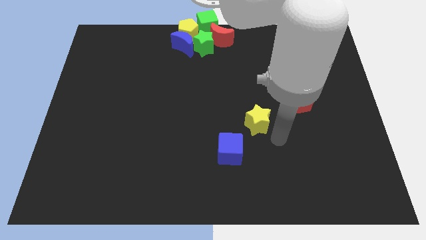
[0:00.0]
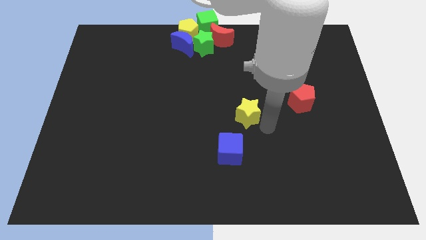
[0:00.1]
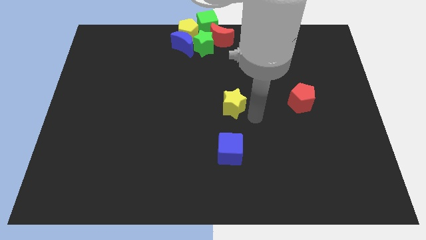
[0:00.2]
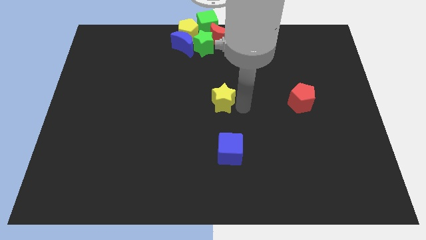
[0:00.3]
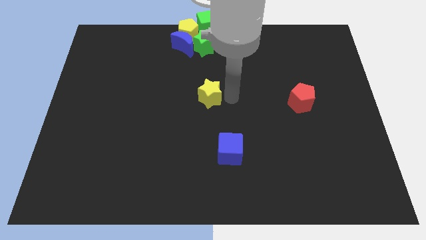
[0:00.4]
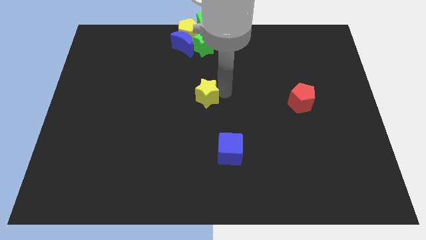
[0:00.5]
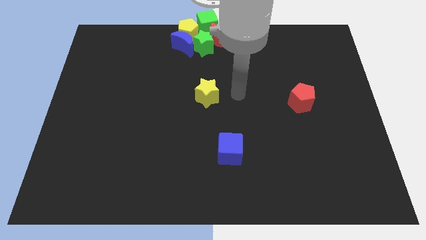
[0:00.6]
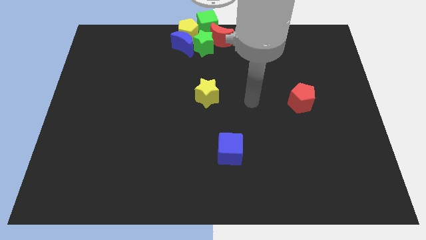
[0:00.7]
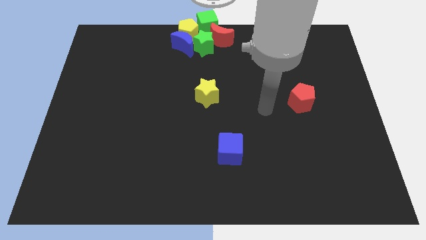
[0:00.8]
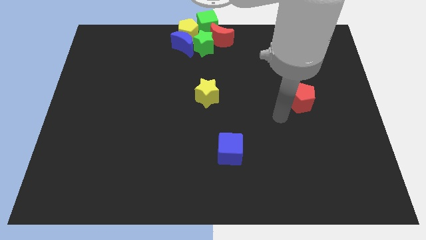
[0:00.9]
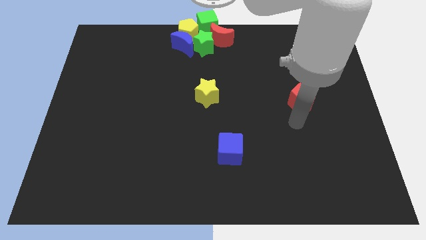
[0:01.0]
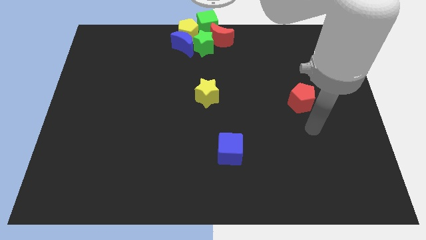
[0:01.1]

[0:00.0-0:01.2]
push the yellow star to the center of the board

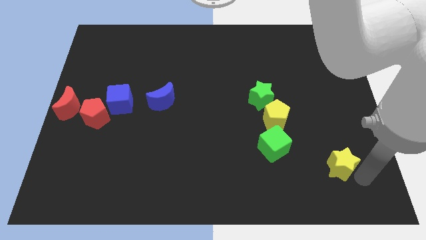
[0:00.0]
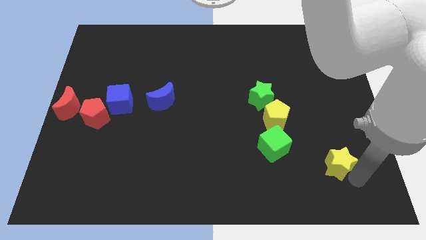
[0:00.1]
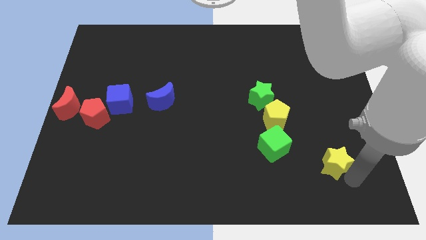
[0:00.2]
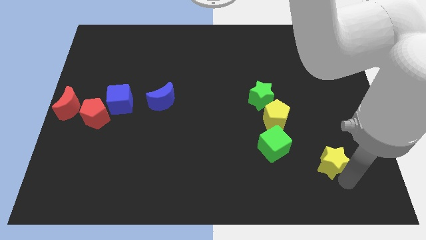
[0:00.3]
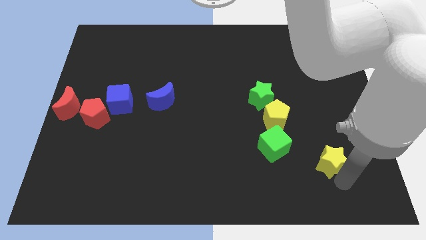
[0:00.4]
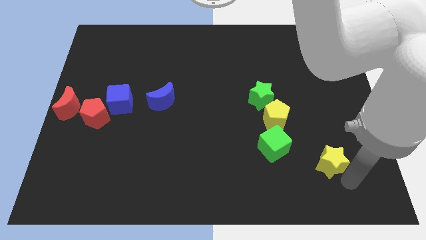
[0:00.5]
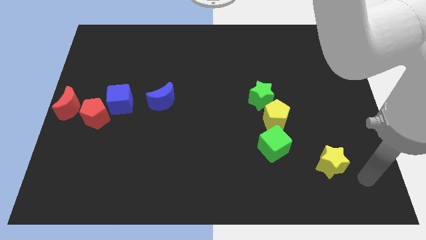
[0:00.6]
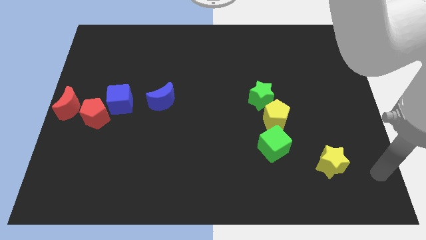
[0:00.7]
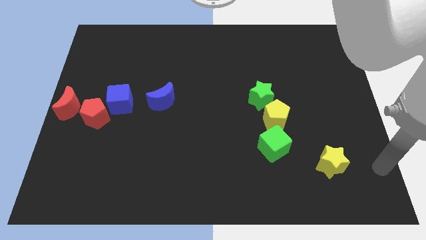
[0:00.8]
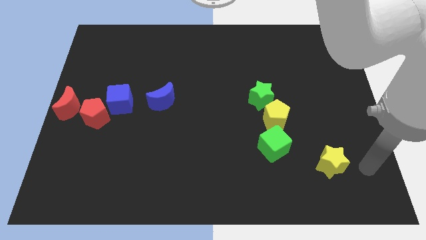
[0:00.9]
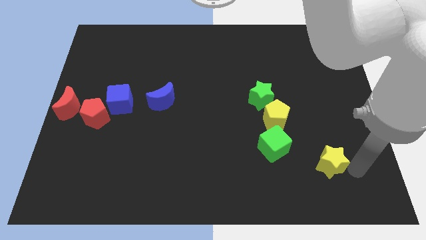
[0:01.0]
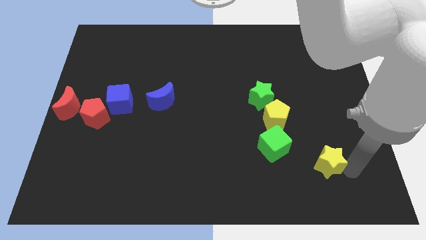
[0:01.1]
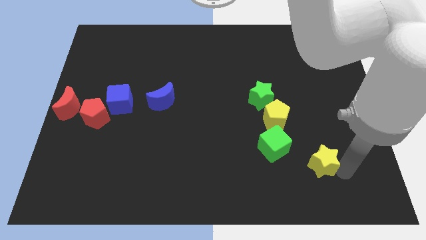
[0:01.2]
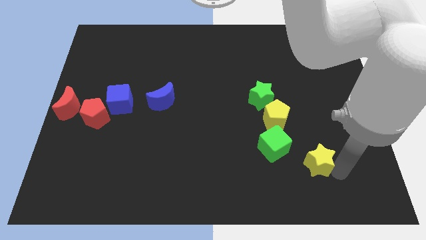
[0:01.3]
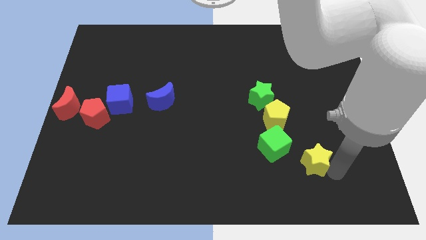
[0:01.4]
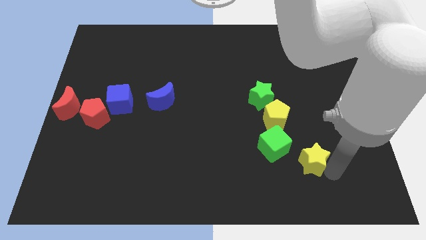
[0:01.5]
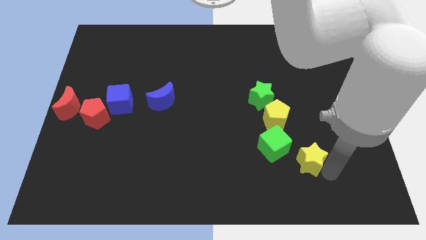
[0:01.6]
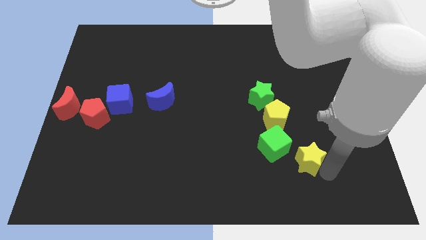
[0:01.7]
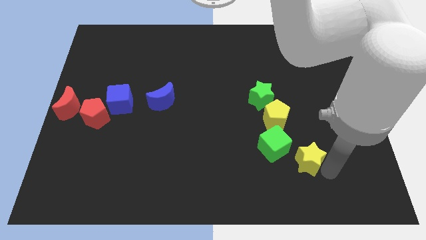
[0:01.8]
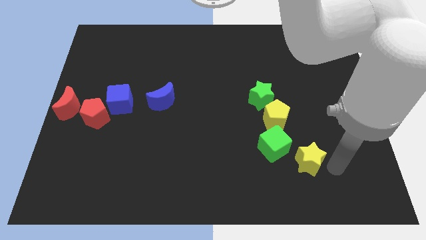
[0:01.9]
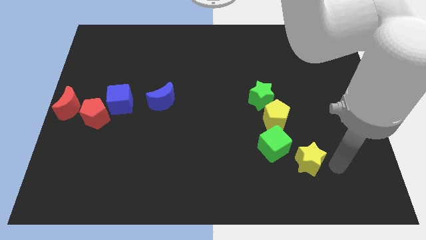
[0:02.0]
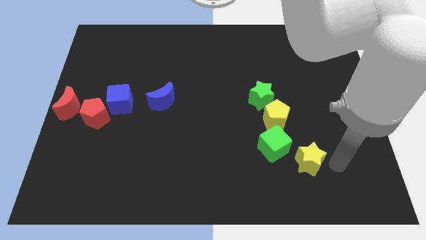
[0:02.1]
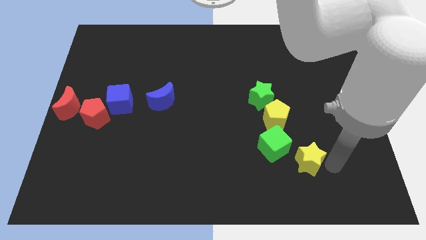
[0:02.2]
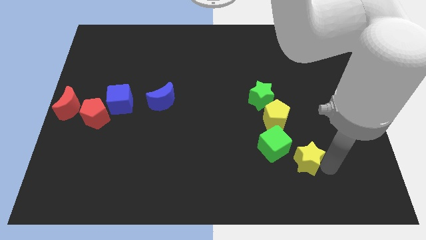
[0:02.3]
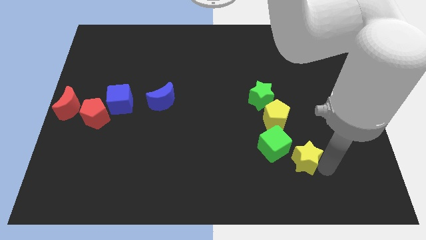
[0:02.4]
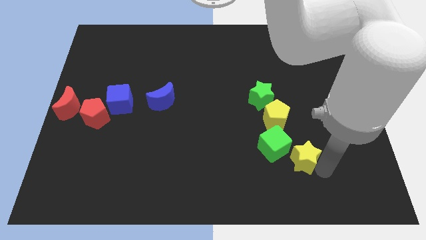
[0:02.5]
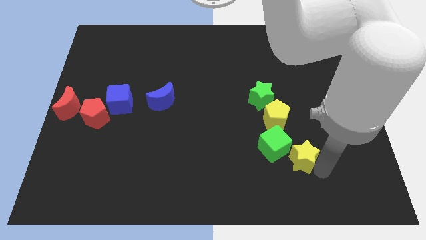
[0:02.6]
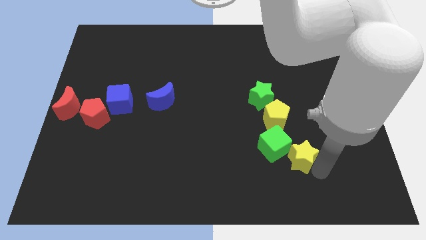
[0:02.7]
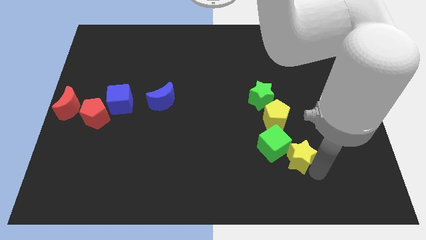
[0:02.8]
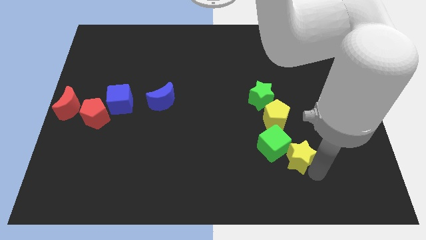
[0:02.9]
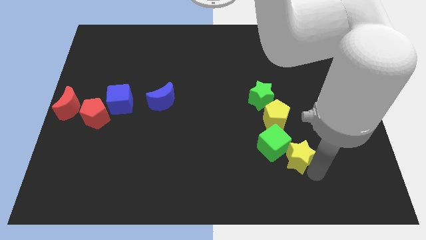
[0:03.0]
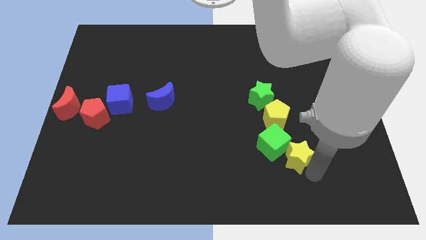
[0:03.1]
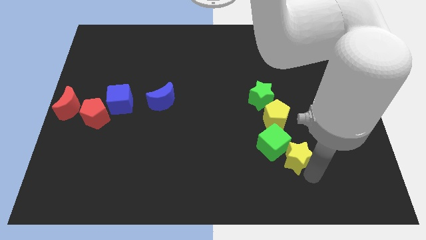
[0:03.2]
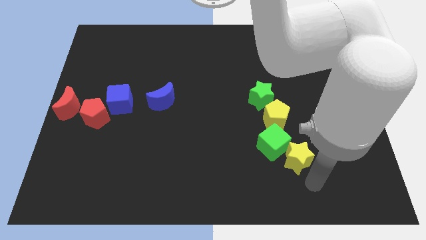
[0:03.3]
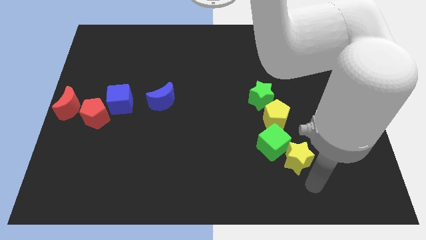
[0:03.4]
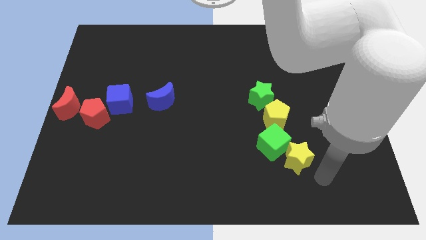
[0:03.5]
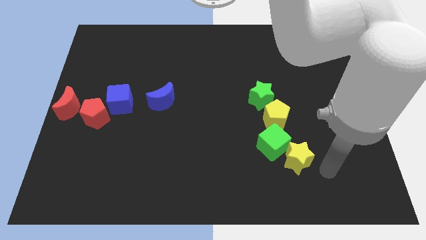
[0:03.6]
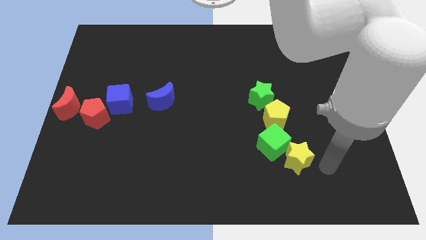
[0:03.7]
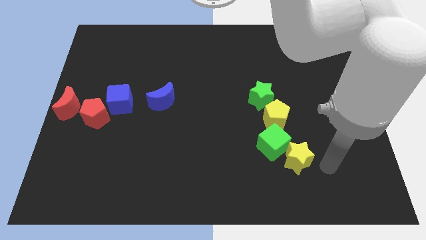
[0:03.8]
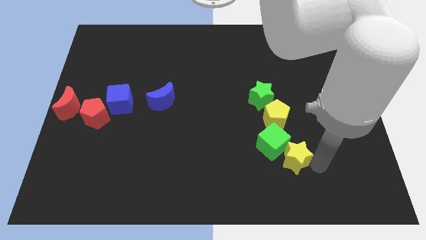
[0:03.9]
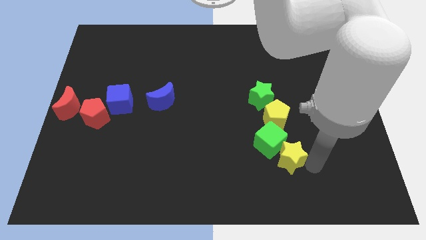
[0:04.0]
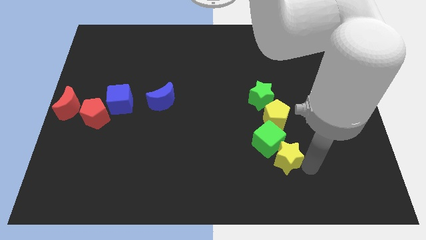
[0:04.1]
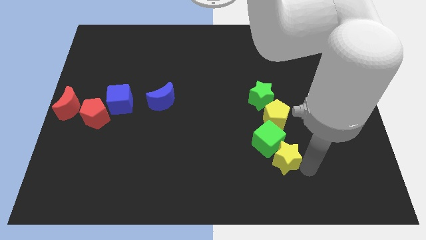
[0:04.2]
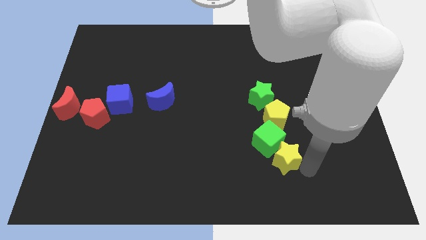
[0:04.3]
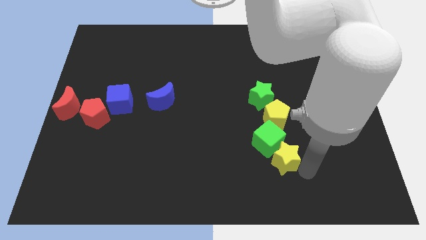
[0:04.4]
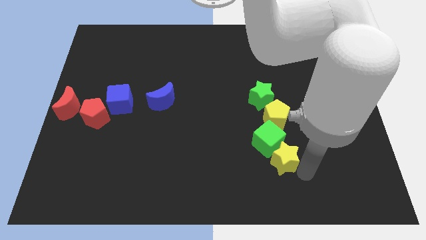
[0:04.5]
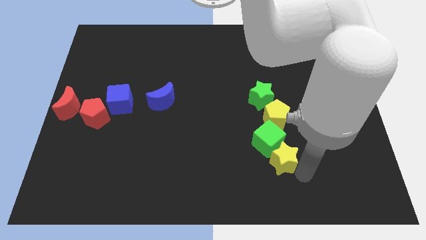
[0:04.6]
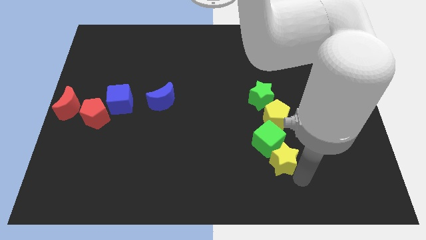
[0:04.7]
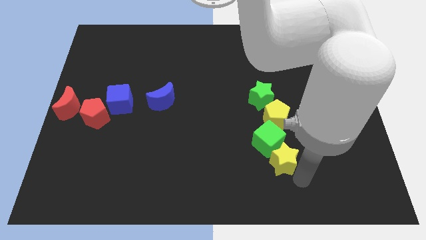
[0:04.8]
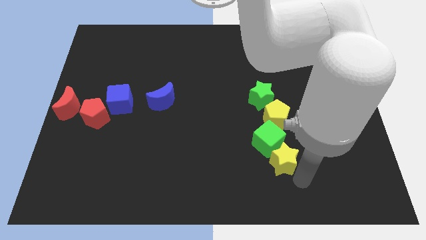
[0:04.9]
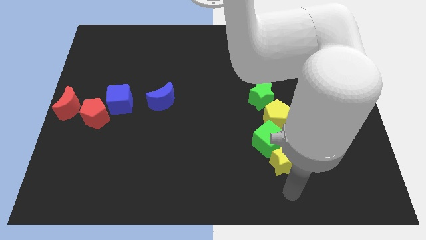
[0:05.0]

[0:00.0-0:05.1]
push the yellow star below the green cube

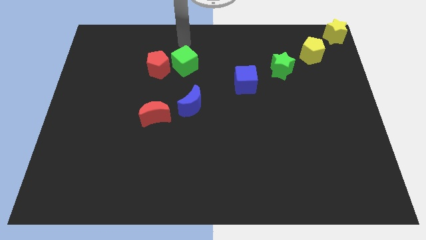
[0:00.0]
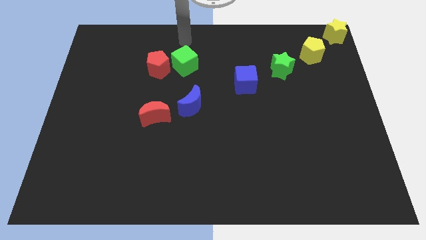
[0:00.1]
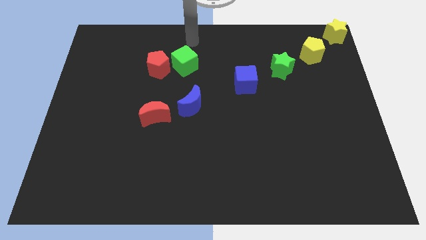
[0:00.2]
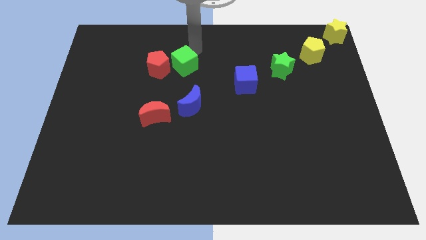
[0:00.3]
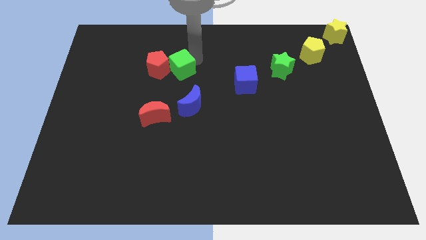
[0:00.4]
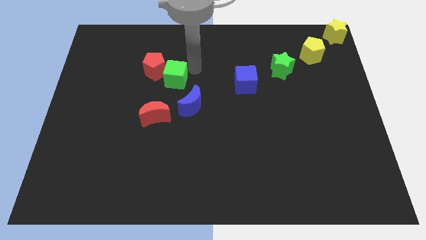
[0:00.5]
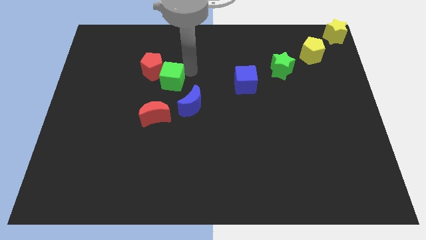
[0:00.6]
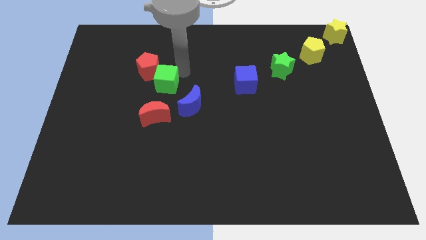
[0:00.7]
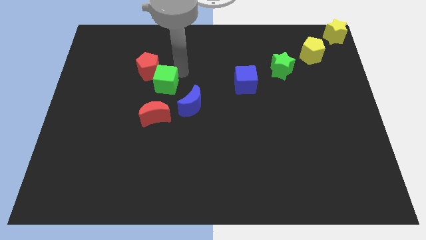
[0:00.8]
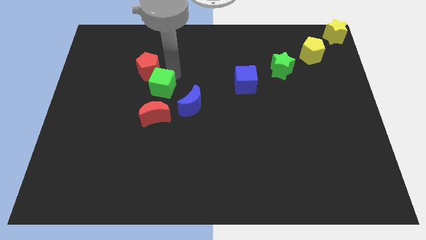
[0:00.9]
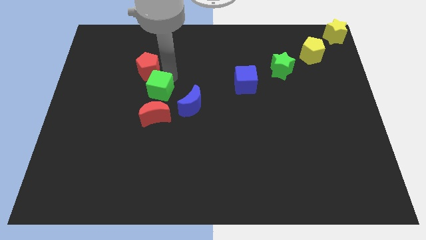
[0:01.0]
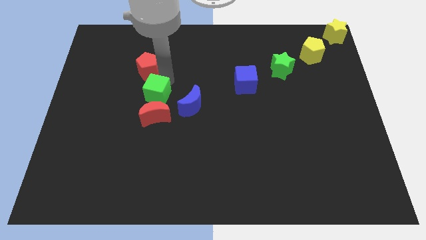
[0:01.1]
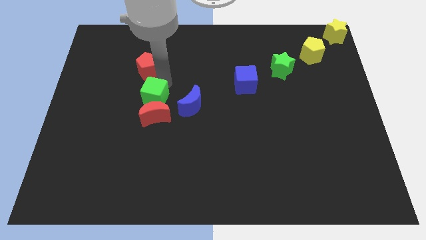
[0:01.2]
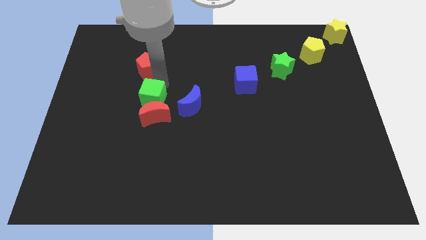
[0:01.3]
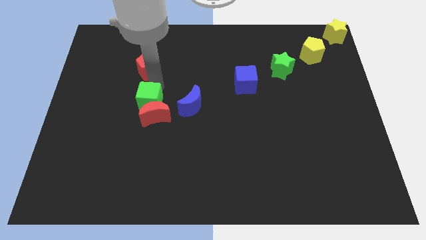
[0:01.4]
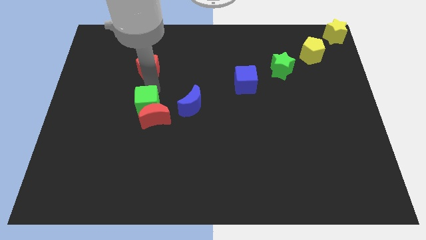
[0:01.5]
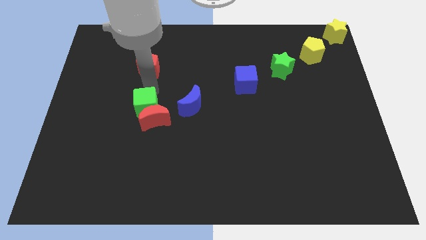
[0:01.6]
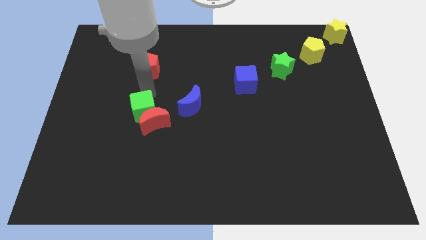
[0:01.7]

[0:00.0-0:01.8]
push the green cube into the red moon

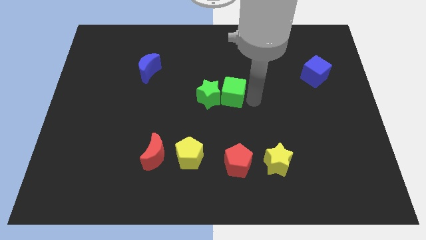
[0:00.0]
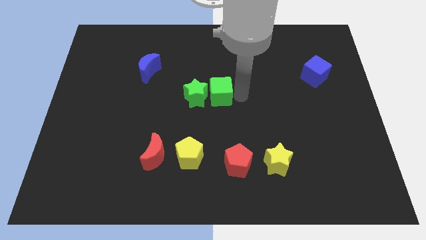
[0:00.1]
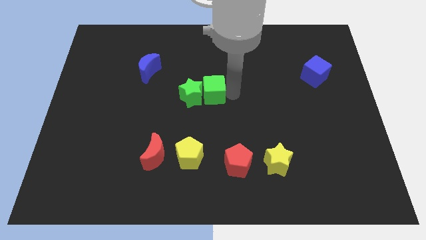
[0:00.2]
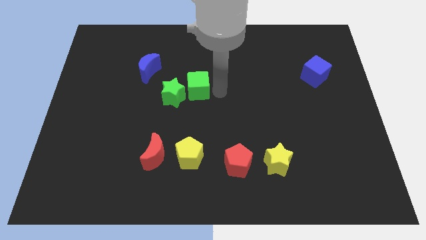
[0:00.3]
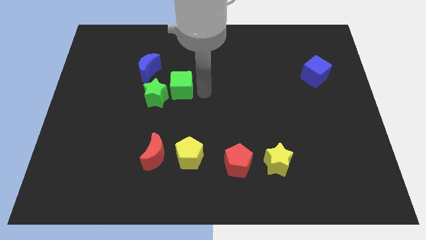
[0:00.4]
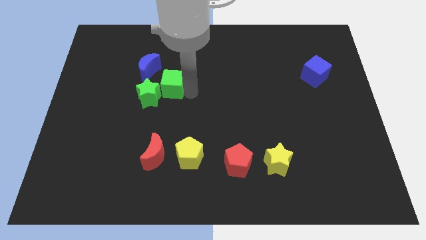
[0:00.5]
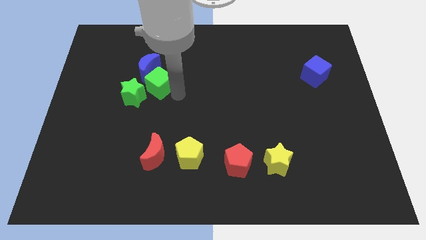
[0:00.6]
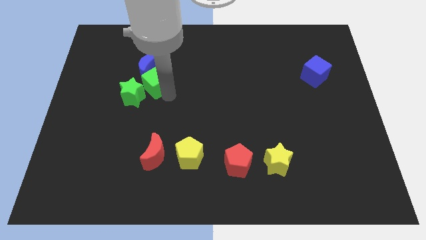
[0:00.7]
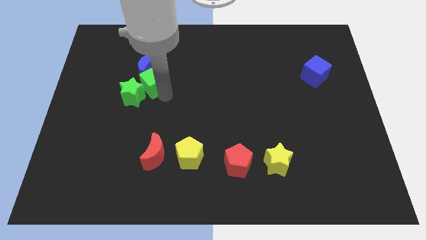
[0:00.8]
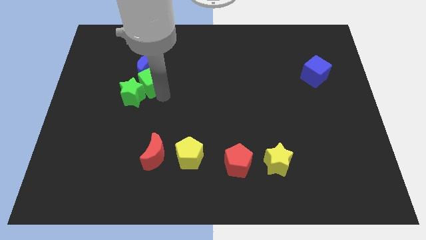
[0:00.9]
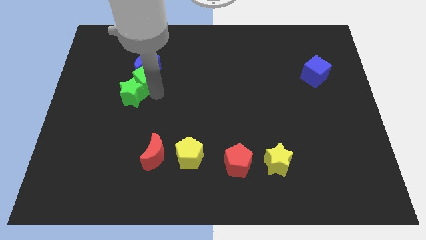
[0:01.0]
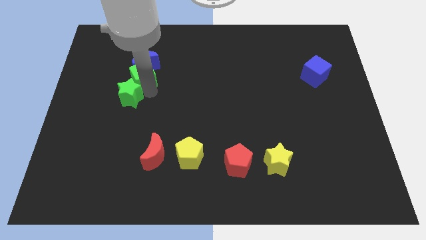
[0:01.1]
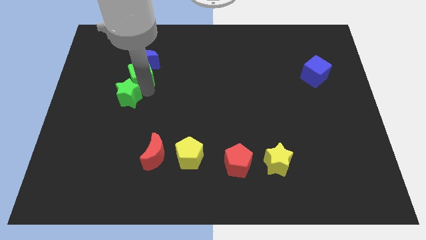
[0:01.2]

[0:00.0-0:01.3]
push the green blocks towards the center left
